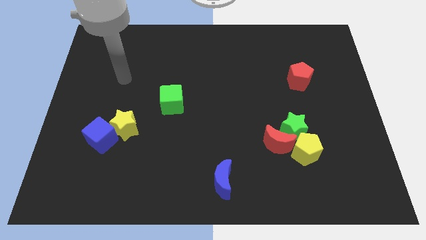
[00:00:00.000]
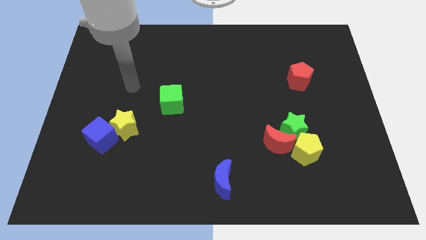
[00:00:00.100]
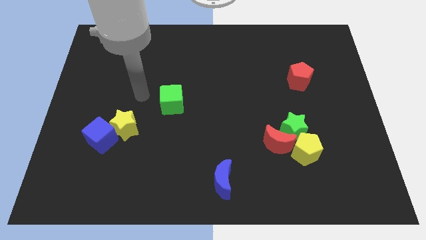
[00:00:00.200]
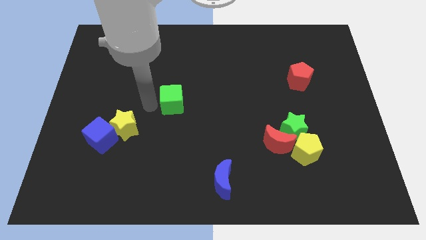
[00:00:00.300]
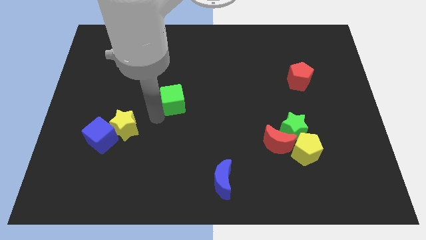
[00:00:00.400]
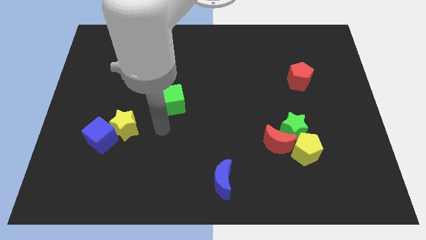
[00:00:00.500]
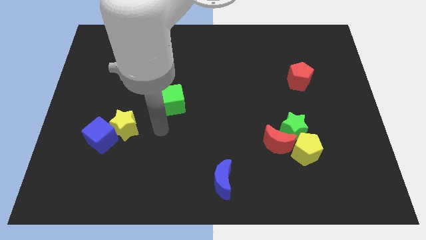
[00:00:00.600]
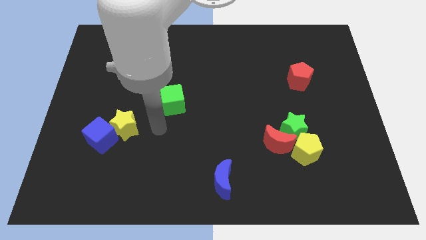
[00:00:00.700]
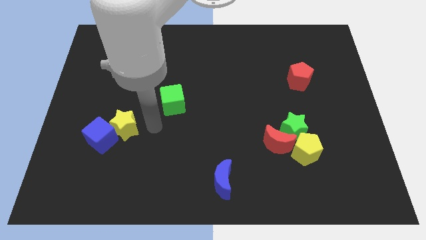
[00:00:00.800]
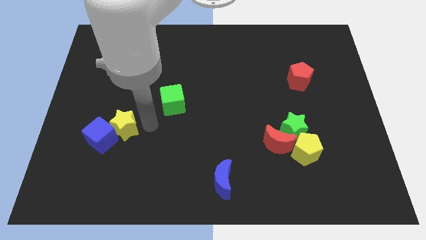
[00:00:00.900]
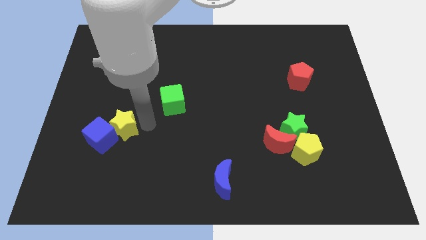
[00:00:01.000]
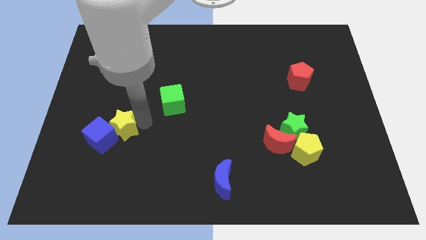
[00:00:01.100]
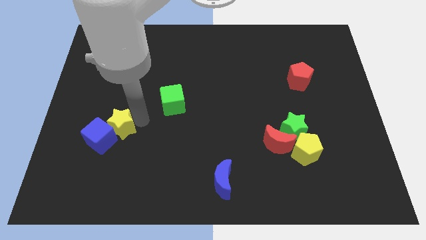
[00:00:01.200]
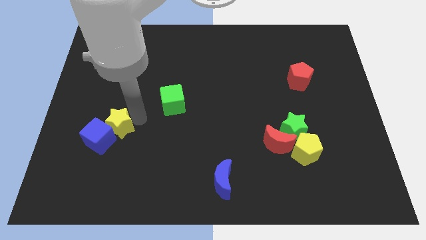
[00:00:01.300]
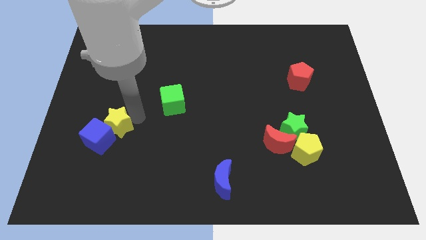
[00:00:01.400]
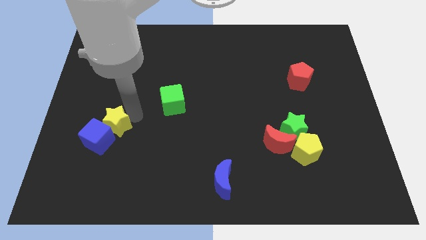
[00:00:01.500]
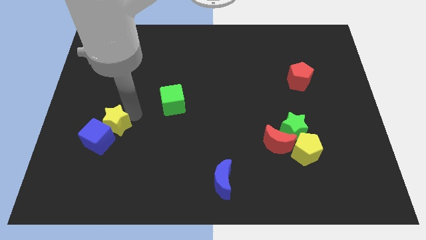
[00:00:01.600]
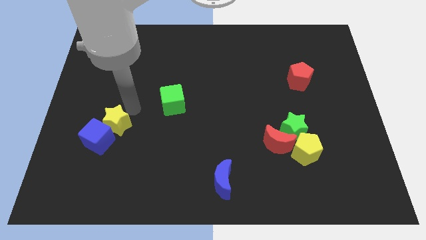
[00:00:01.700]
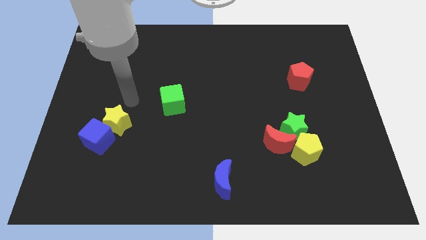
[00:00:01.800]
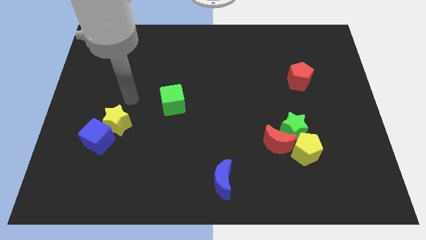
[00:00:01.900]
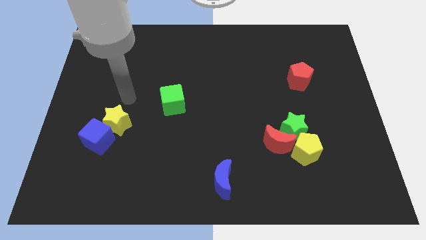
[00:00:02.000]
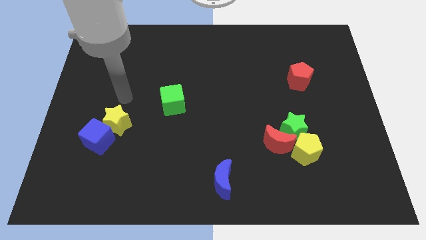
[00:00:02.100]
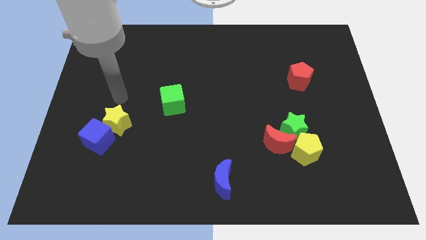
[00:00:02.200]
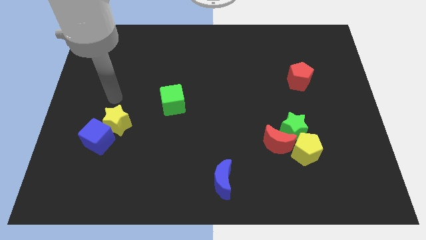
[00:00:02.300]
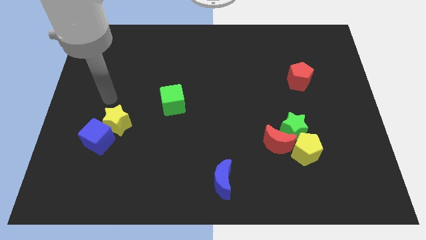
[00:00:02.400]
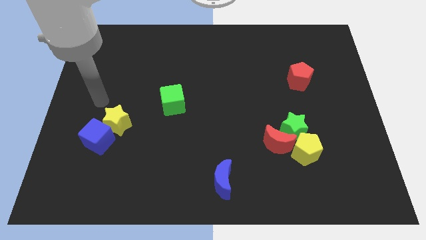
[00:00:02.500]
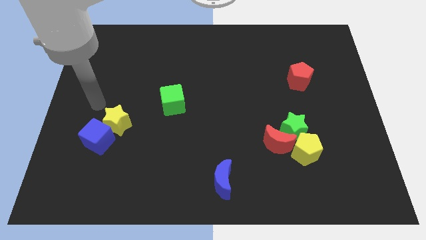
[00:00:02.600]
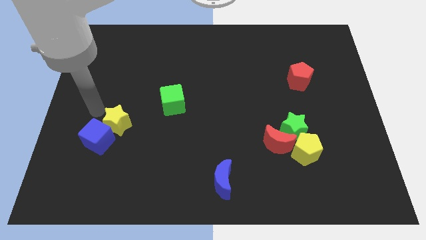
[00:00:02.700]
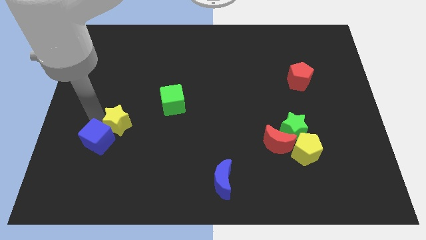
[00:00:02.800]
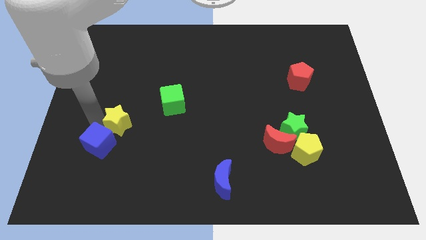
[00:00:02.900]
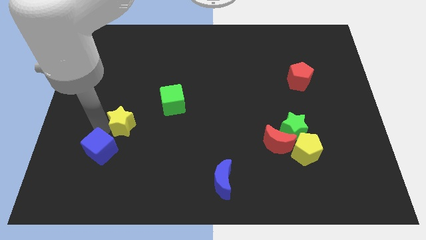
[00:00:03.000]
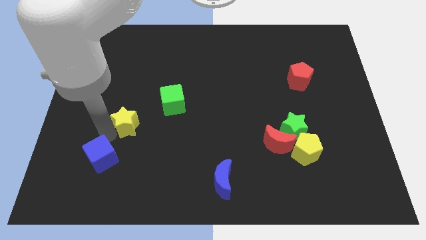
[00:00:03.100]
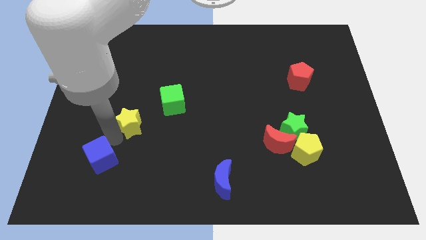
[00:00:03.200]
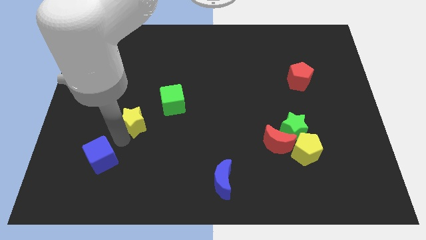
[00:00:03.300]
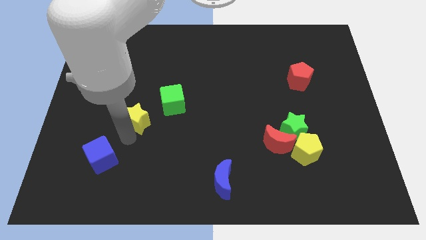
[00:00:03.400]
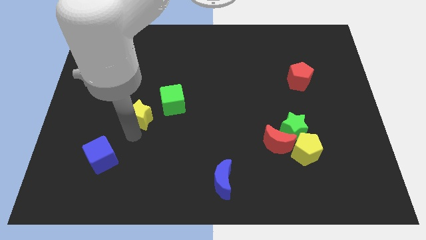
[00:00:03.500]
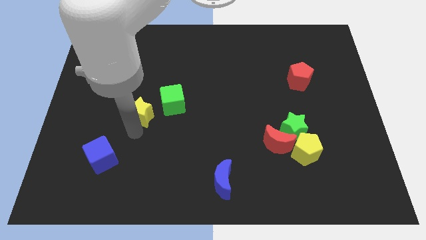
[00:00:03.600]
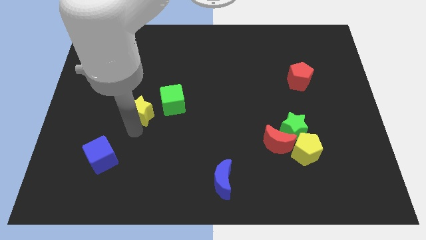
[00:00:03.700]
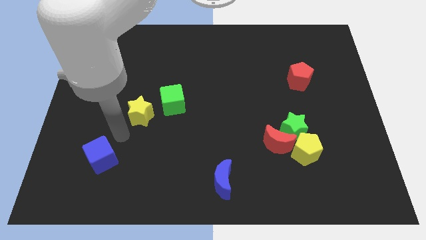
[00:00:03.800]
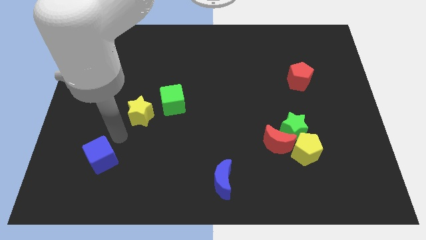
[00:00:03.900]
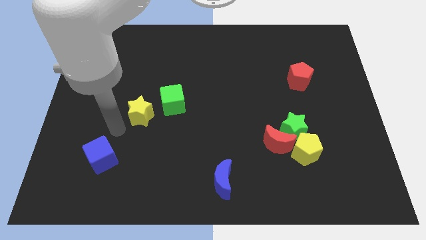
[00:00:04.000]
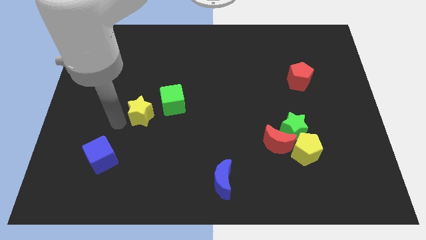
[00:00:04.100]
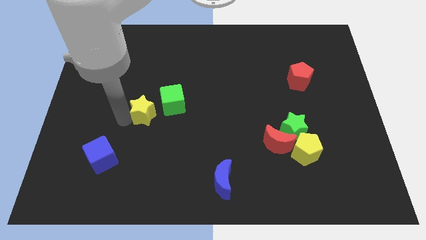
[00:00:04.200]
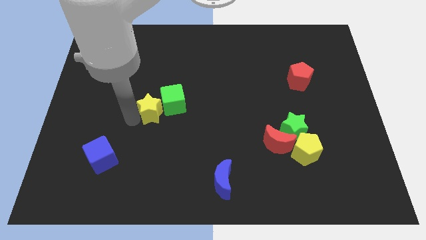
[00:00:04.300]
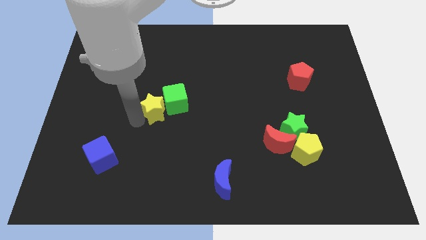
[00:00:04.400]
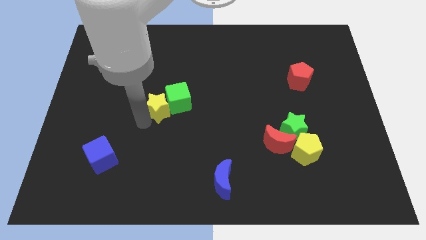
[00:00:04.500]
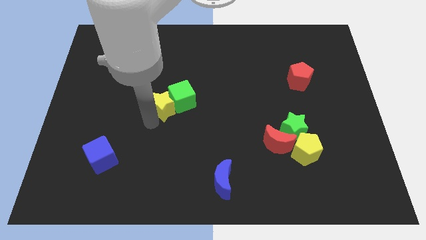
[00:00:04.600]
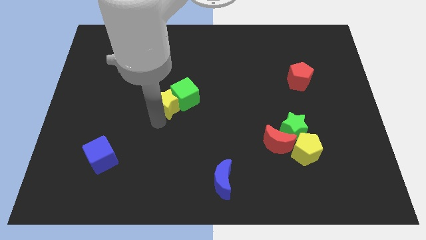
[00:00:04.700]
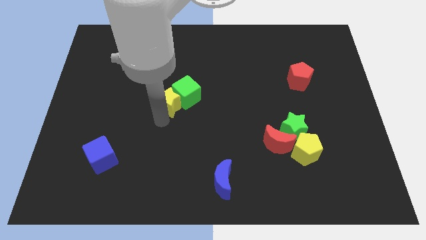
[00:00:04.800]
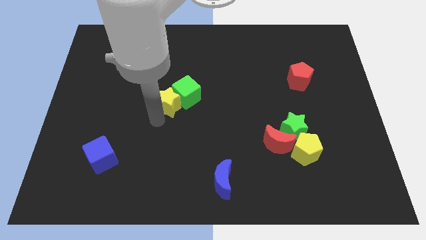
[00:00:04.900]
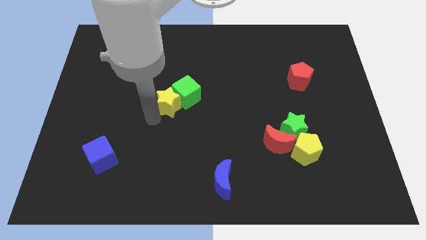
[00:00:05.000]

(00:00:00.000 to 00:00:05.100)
drag the yellow star into the left side of the green cube

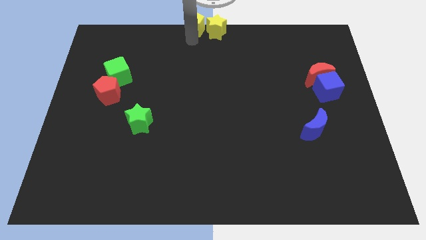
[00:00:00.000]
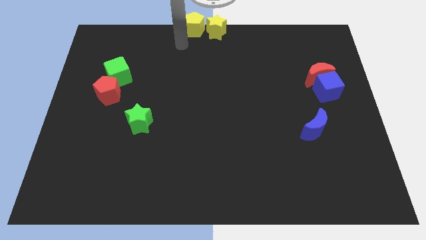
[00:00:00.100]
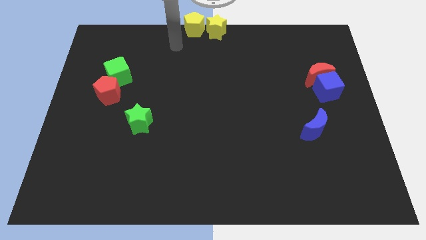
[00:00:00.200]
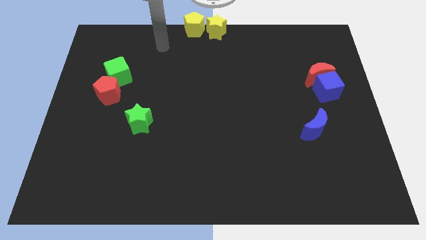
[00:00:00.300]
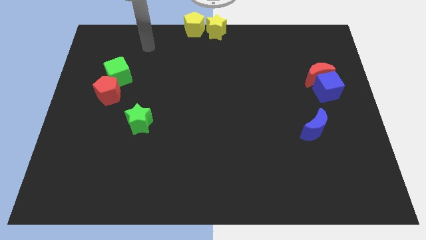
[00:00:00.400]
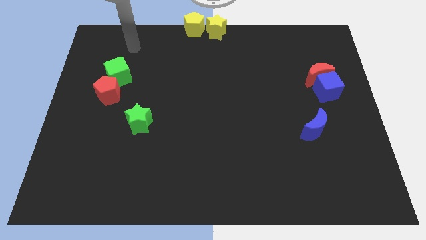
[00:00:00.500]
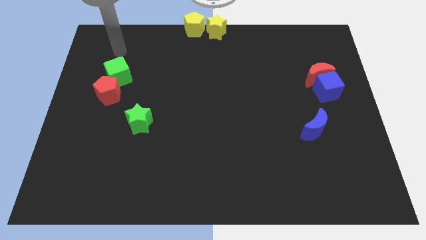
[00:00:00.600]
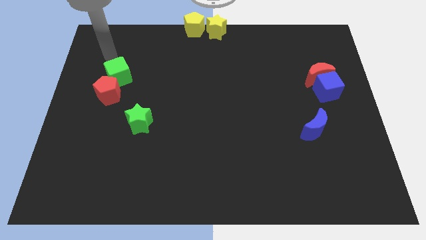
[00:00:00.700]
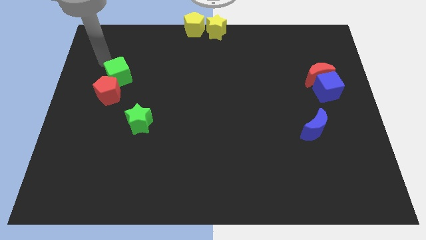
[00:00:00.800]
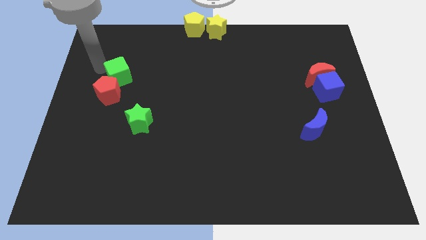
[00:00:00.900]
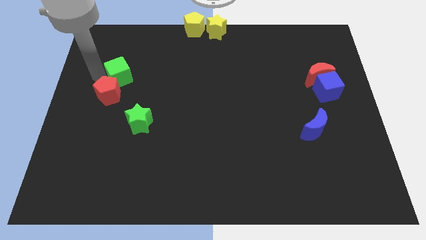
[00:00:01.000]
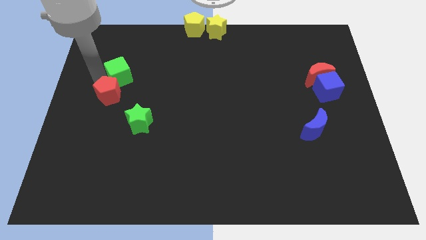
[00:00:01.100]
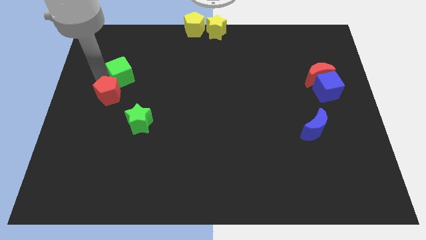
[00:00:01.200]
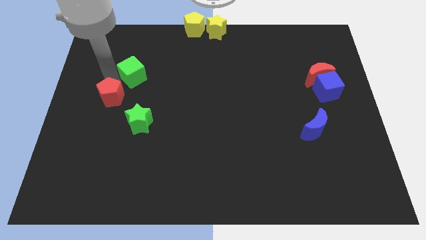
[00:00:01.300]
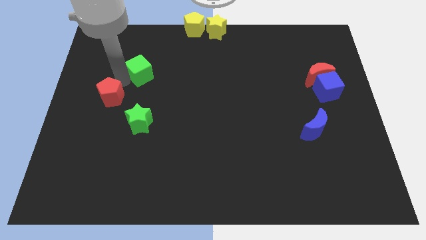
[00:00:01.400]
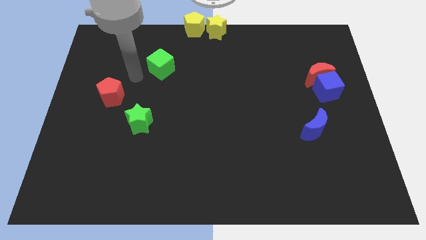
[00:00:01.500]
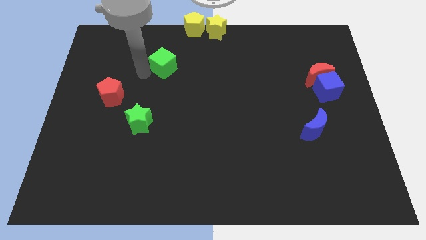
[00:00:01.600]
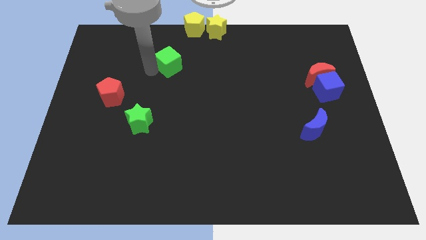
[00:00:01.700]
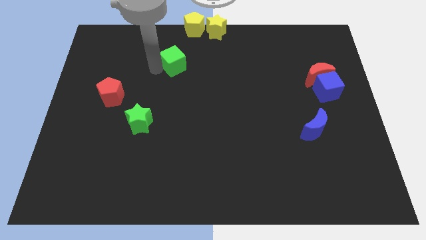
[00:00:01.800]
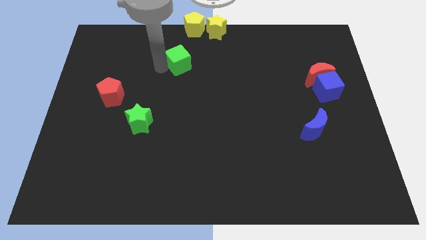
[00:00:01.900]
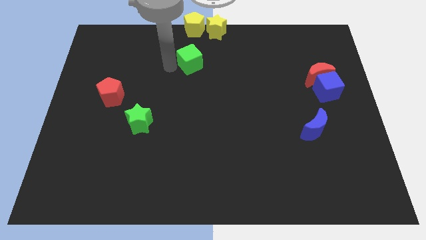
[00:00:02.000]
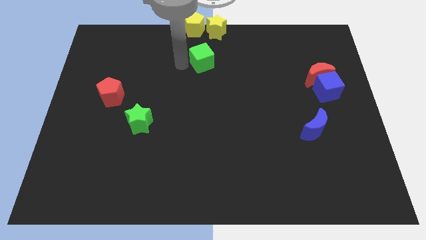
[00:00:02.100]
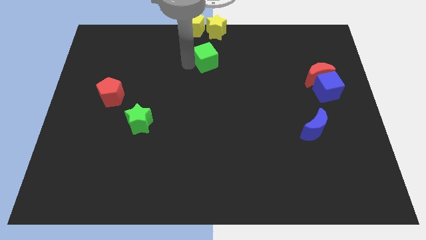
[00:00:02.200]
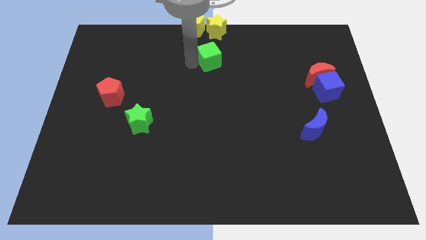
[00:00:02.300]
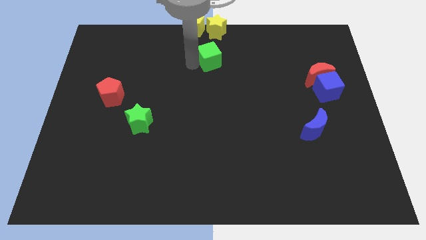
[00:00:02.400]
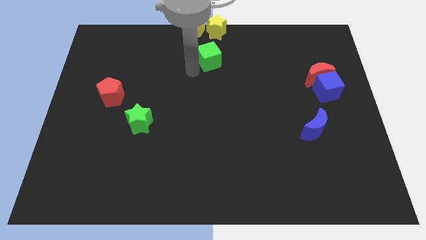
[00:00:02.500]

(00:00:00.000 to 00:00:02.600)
place the green cube to the bottom of yellow blocks

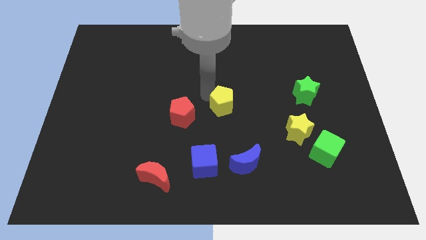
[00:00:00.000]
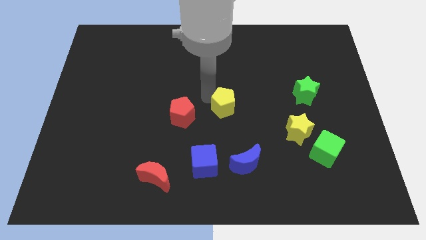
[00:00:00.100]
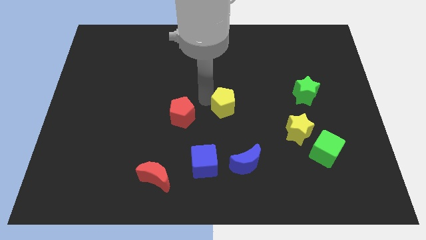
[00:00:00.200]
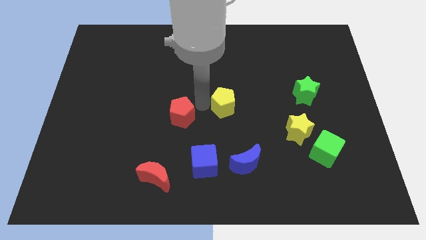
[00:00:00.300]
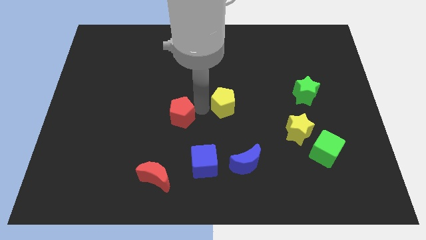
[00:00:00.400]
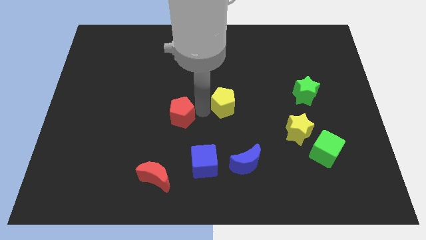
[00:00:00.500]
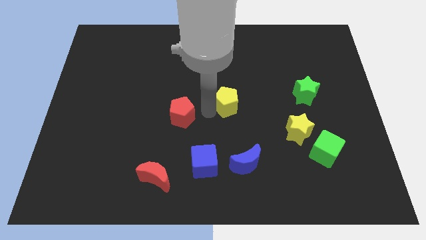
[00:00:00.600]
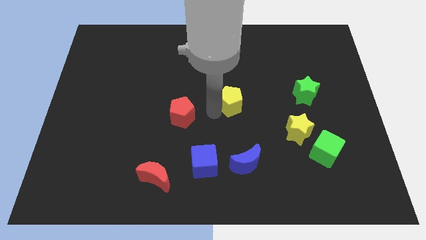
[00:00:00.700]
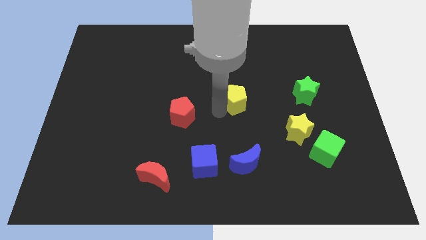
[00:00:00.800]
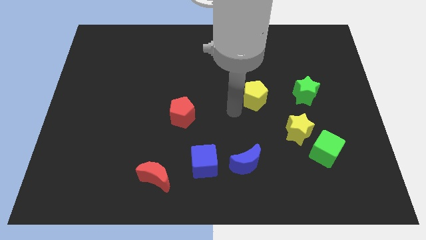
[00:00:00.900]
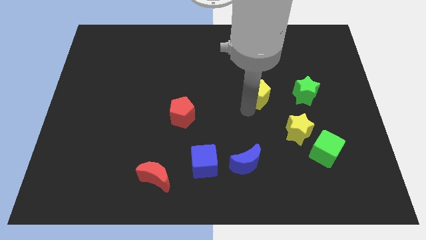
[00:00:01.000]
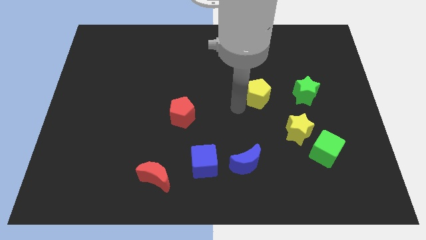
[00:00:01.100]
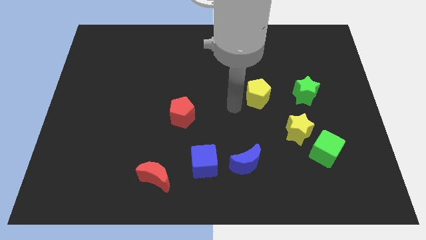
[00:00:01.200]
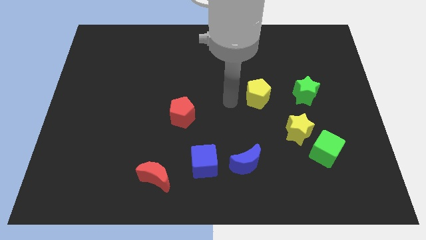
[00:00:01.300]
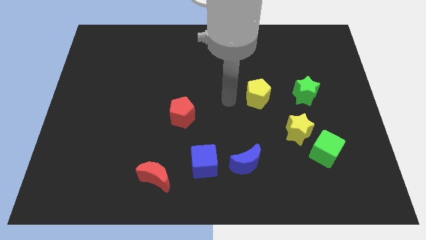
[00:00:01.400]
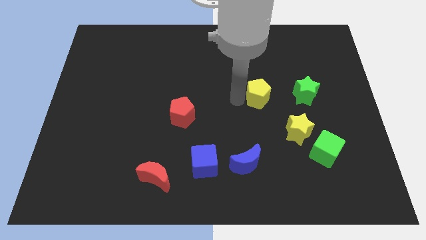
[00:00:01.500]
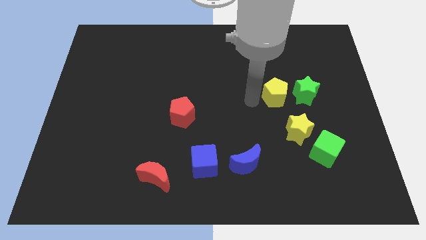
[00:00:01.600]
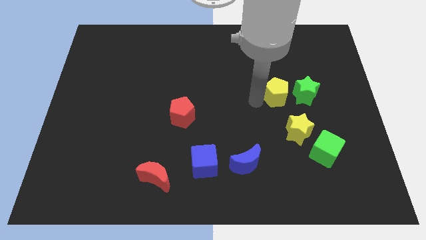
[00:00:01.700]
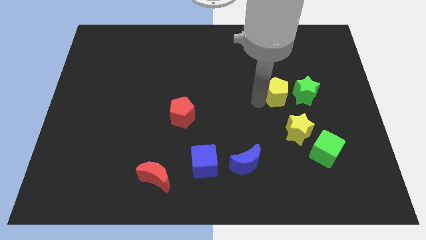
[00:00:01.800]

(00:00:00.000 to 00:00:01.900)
push the yellow pentagon to the left of the green star
